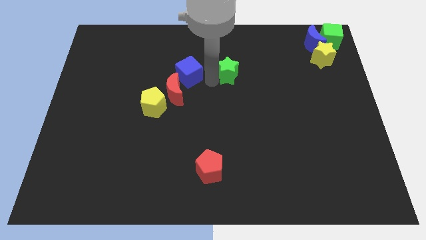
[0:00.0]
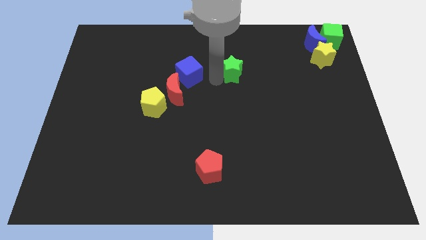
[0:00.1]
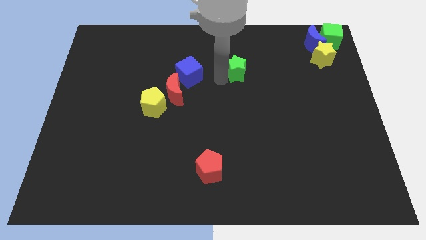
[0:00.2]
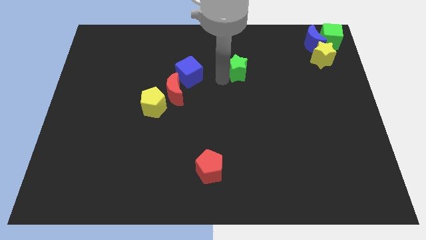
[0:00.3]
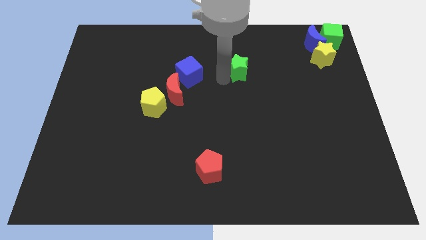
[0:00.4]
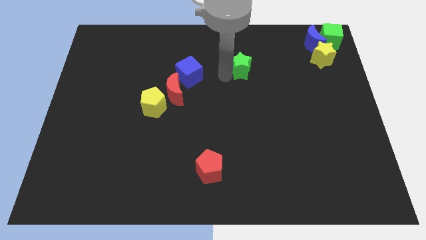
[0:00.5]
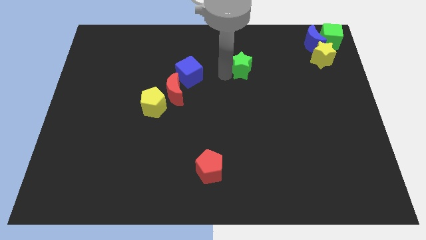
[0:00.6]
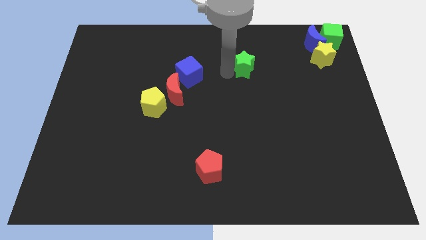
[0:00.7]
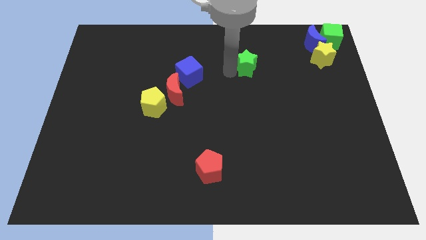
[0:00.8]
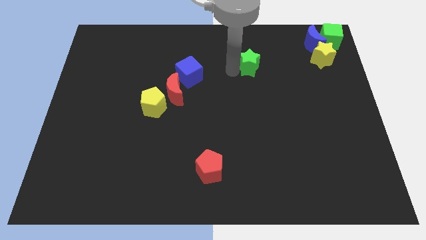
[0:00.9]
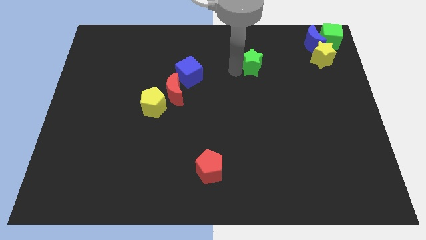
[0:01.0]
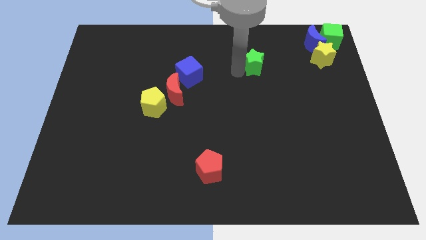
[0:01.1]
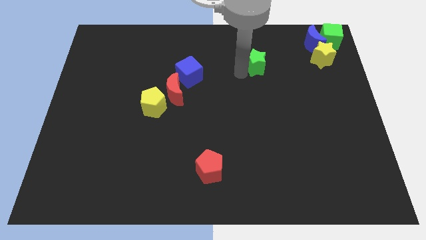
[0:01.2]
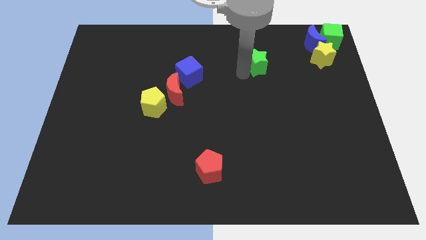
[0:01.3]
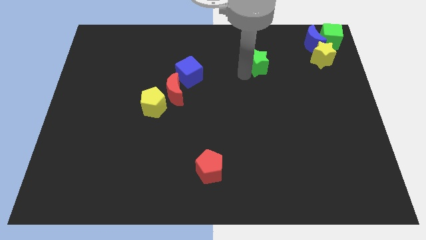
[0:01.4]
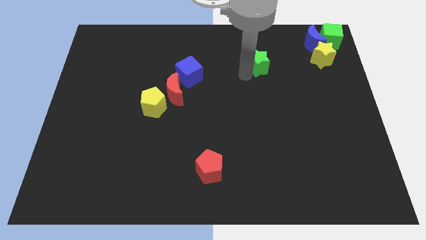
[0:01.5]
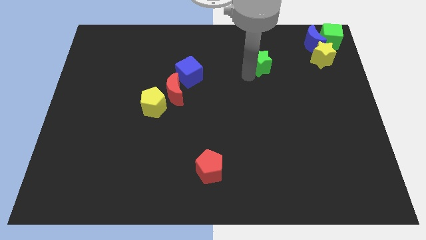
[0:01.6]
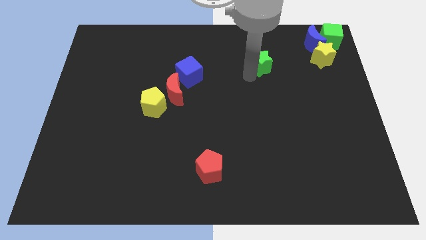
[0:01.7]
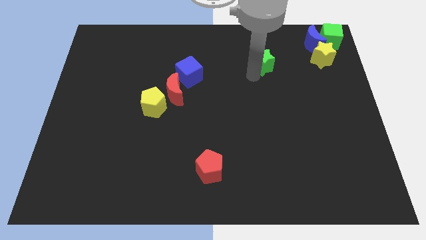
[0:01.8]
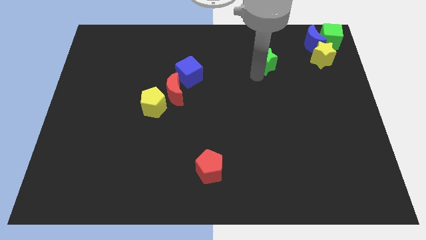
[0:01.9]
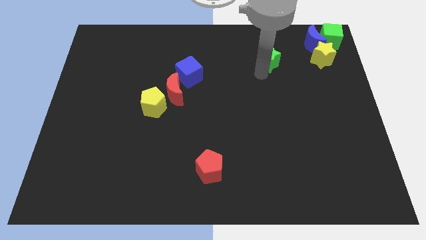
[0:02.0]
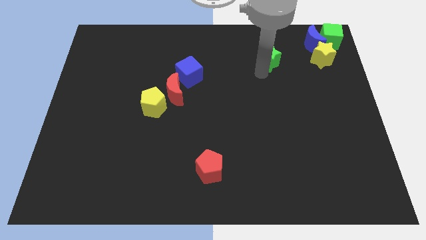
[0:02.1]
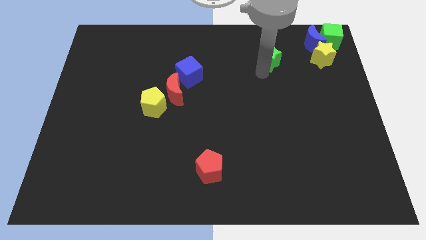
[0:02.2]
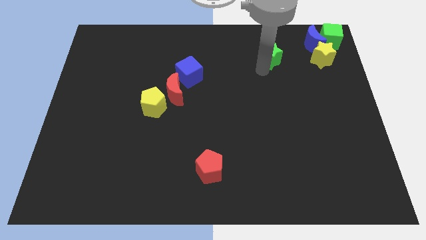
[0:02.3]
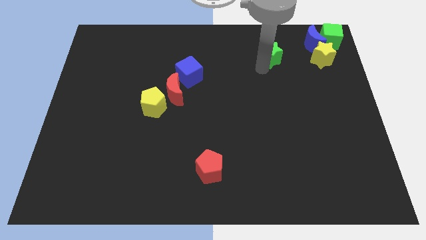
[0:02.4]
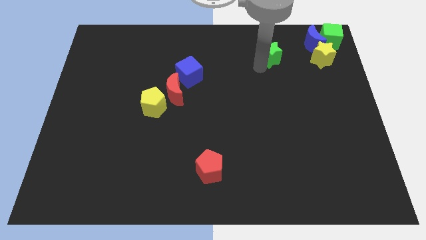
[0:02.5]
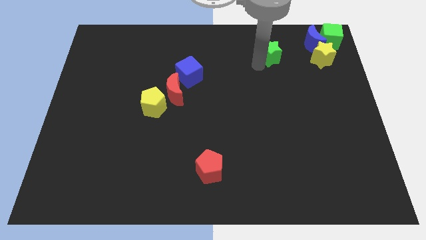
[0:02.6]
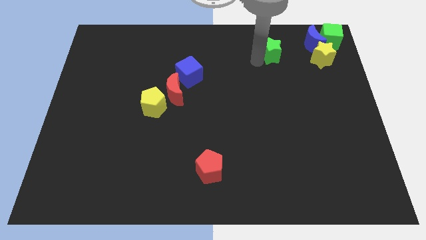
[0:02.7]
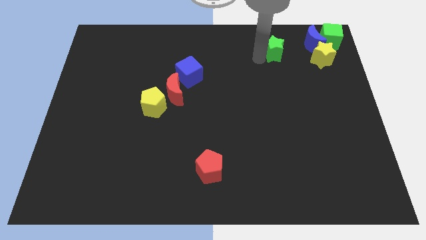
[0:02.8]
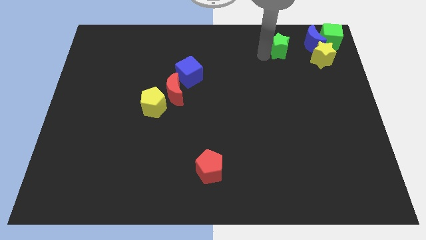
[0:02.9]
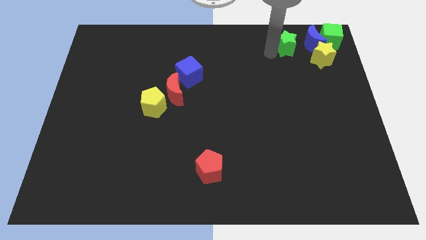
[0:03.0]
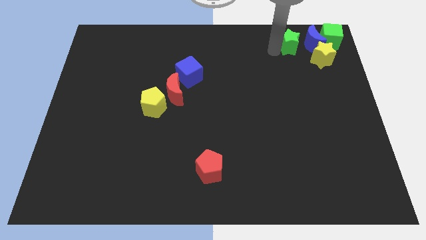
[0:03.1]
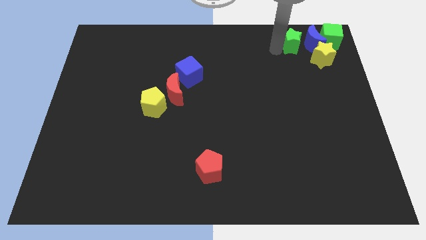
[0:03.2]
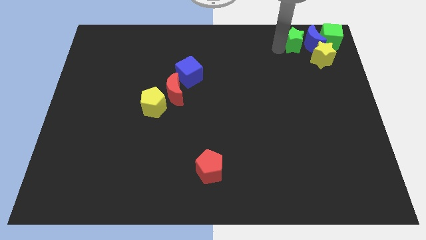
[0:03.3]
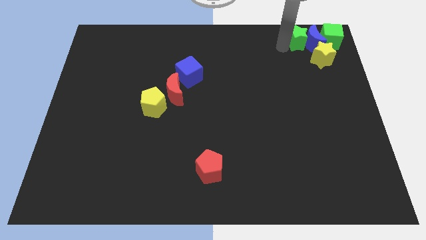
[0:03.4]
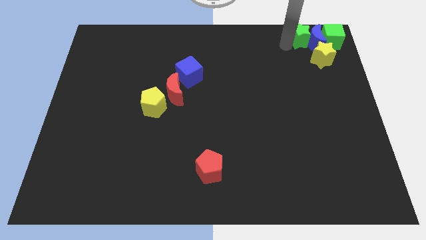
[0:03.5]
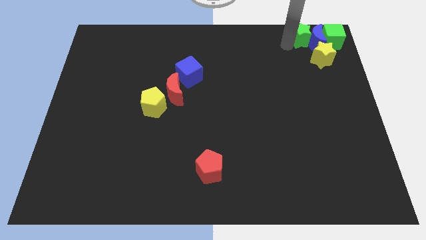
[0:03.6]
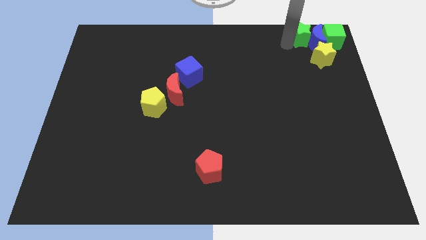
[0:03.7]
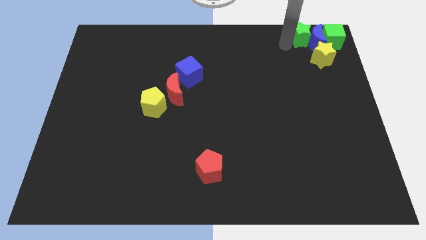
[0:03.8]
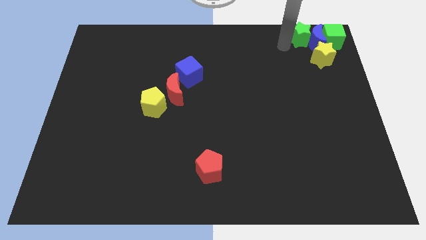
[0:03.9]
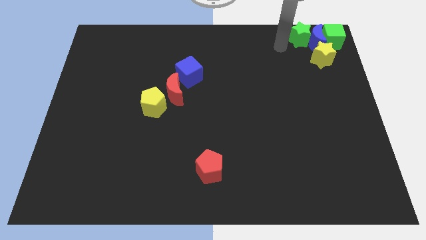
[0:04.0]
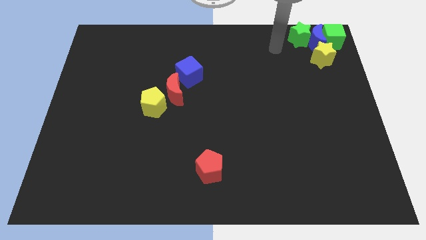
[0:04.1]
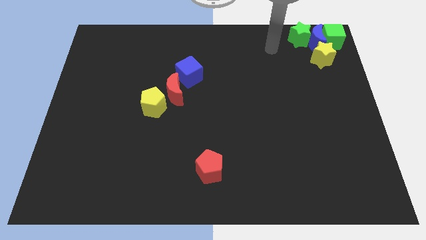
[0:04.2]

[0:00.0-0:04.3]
separate the green star to the left of the blue moon

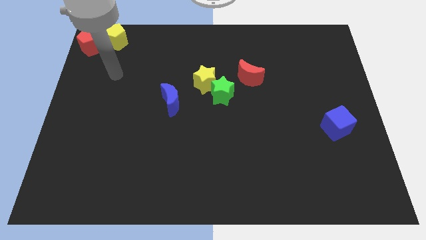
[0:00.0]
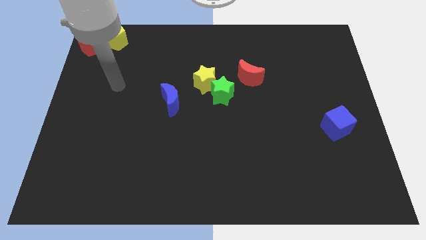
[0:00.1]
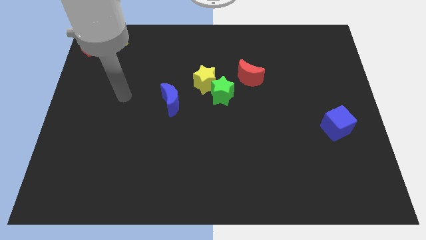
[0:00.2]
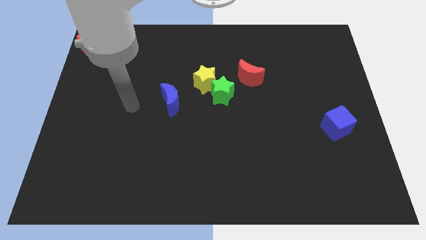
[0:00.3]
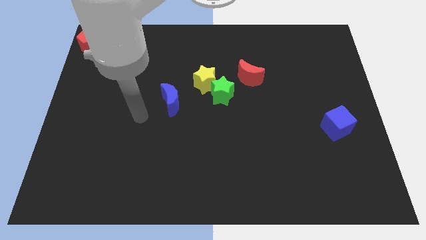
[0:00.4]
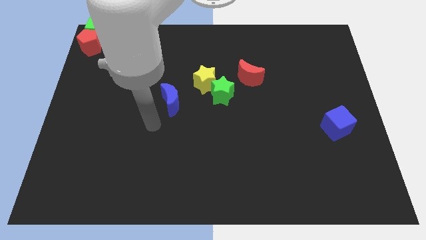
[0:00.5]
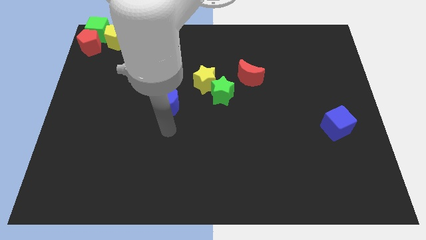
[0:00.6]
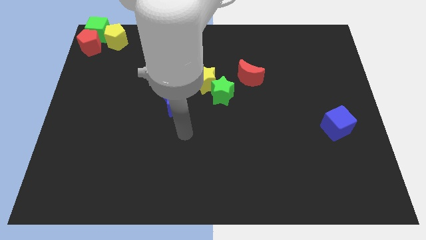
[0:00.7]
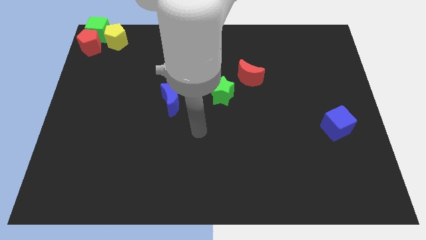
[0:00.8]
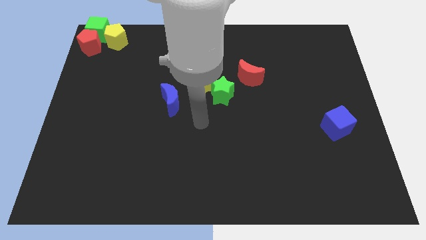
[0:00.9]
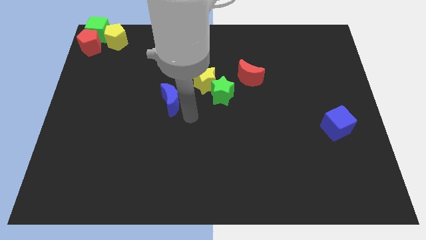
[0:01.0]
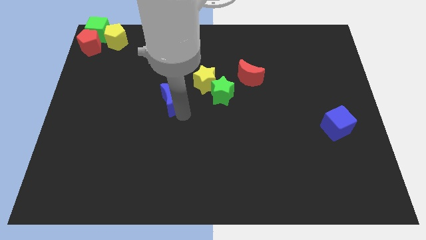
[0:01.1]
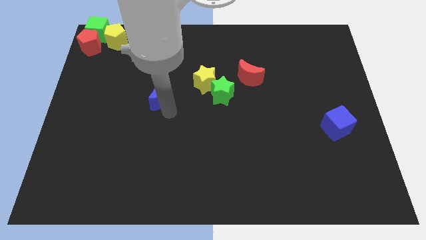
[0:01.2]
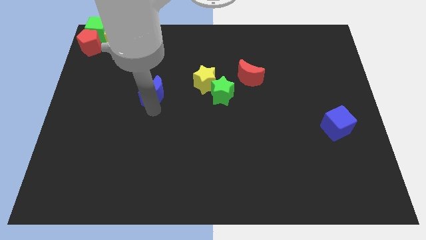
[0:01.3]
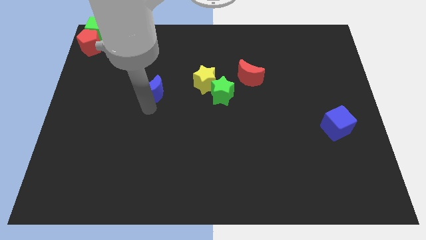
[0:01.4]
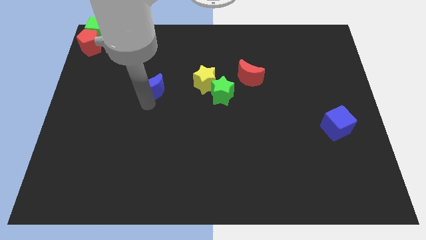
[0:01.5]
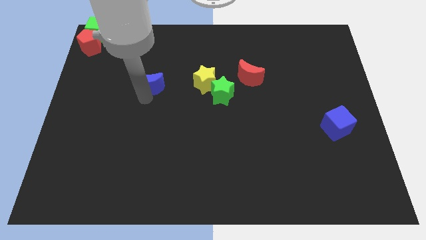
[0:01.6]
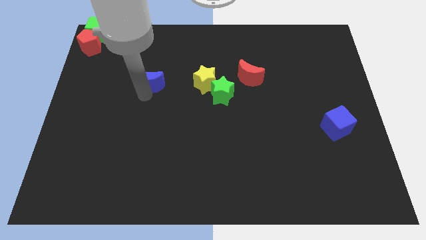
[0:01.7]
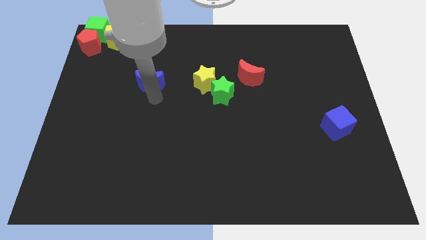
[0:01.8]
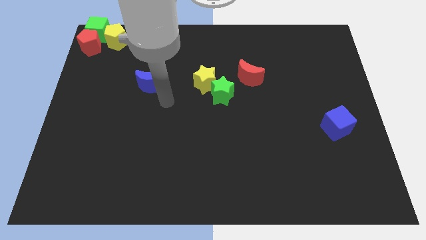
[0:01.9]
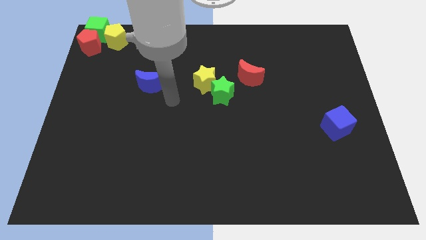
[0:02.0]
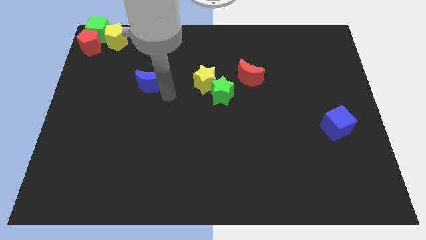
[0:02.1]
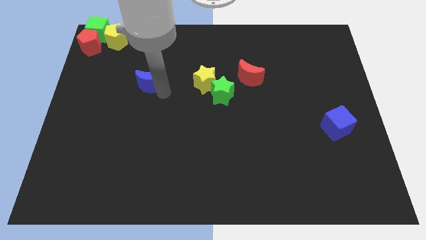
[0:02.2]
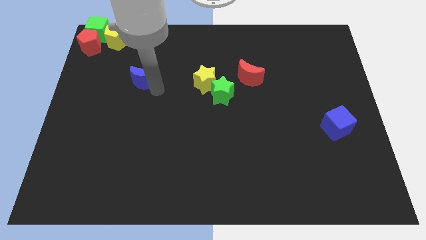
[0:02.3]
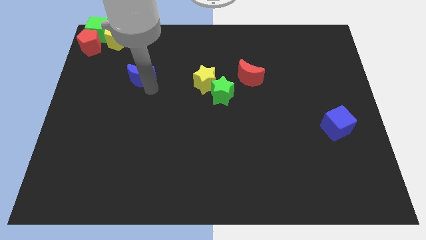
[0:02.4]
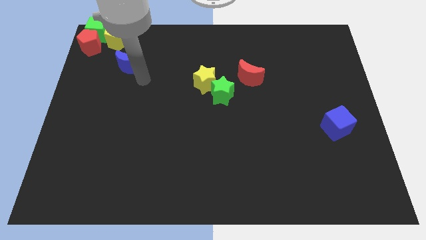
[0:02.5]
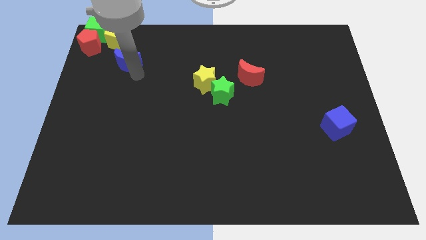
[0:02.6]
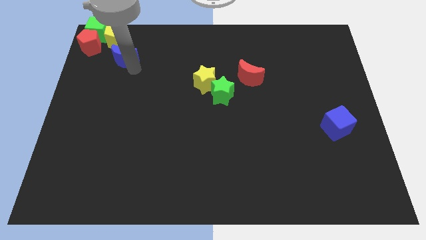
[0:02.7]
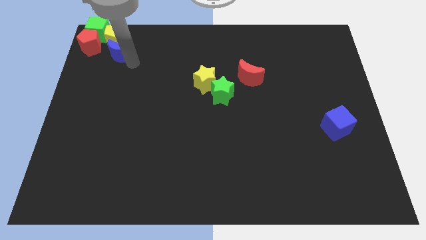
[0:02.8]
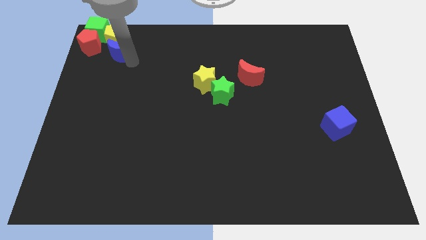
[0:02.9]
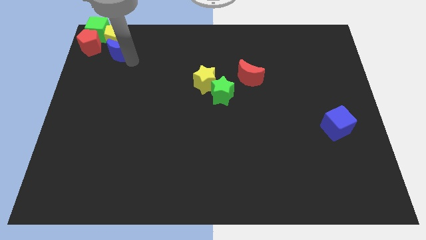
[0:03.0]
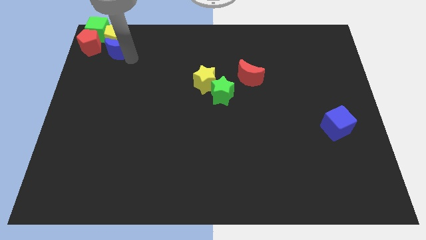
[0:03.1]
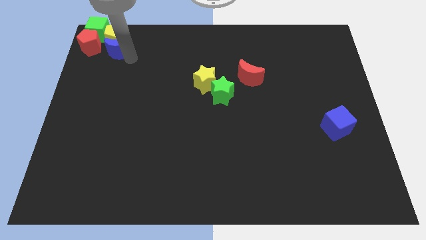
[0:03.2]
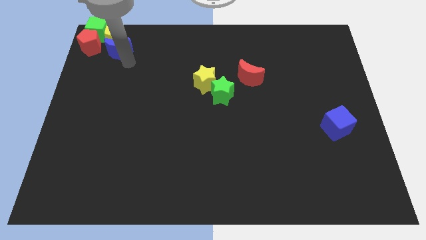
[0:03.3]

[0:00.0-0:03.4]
move blue moon below the yellow pentagon

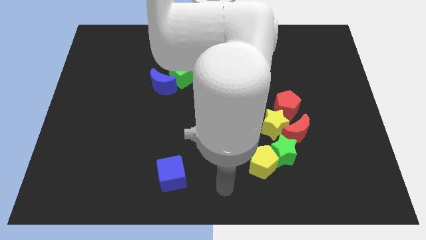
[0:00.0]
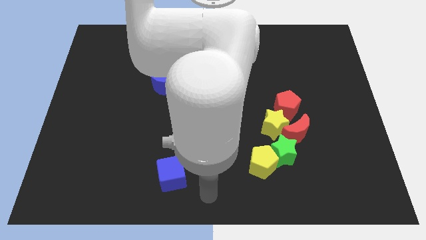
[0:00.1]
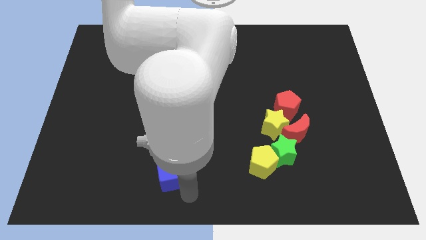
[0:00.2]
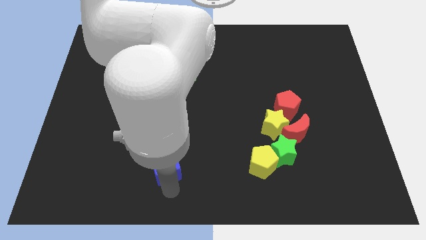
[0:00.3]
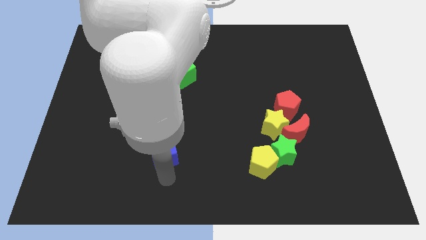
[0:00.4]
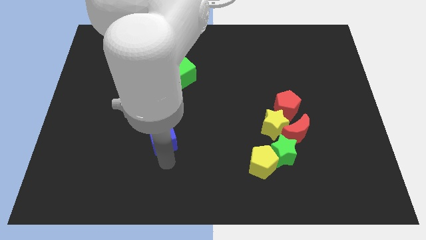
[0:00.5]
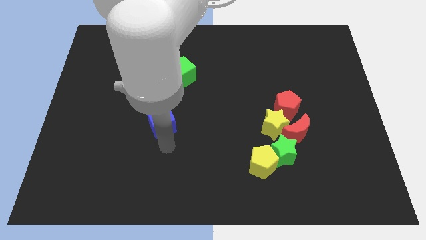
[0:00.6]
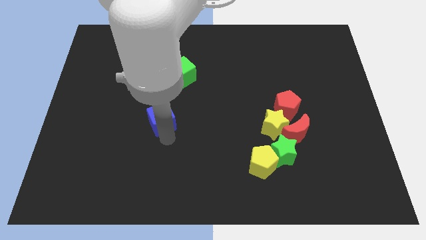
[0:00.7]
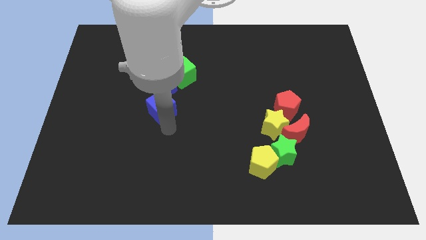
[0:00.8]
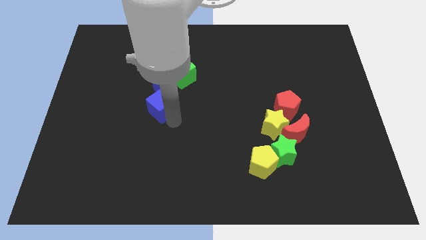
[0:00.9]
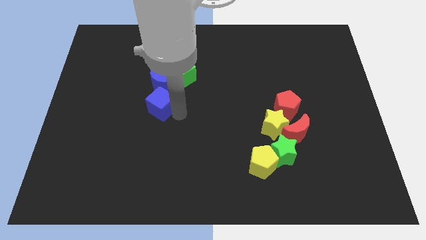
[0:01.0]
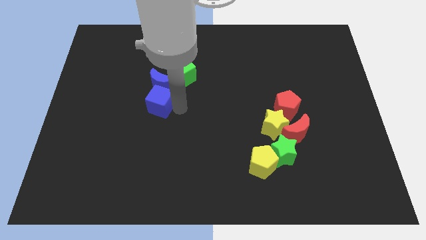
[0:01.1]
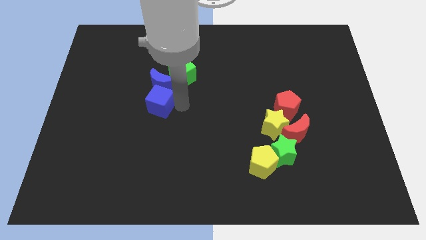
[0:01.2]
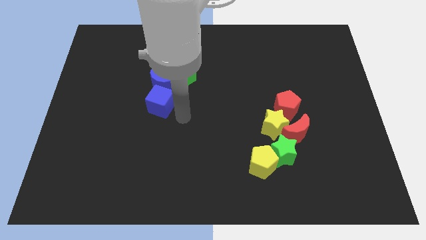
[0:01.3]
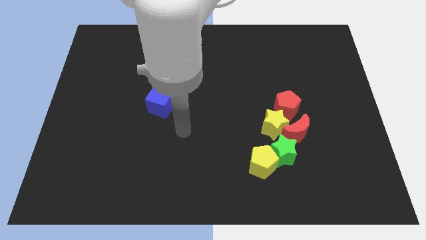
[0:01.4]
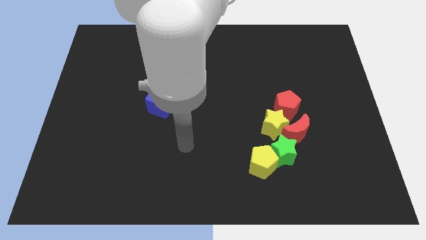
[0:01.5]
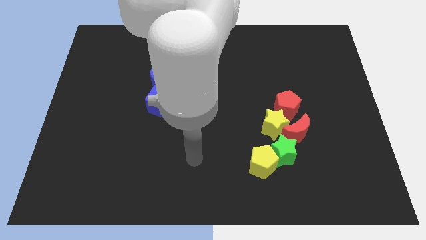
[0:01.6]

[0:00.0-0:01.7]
place the blue cube below the blue crescent
